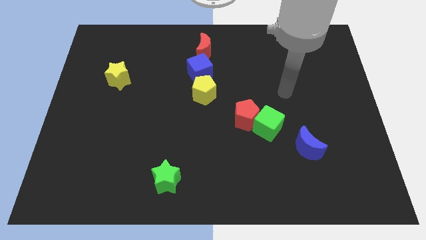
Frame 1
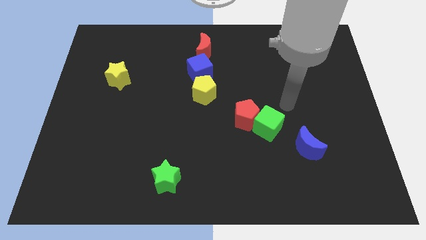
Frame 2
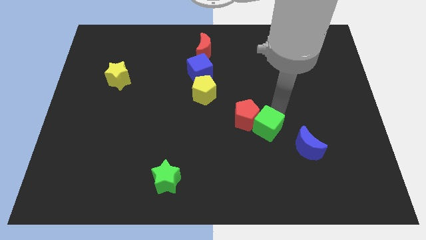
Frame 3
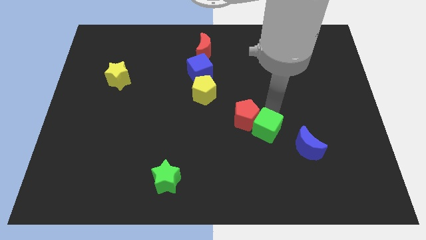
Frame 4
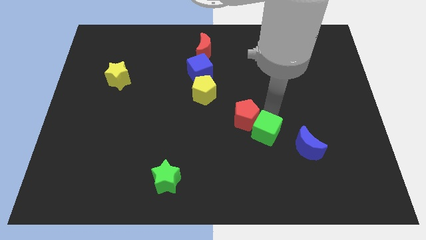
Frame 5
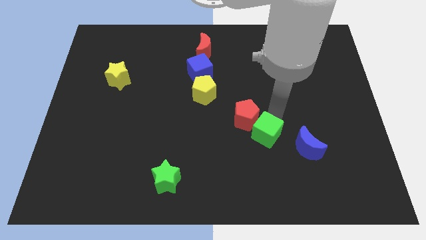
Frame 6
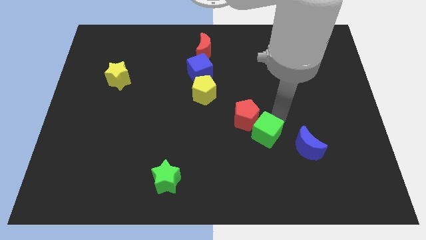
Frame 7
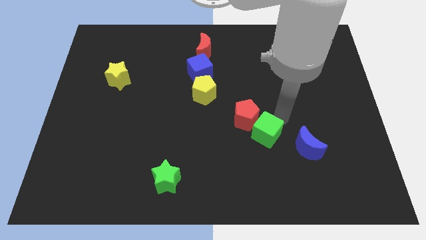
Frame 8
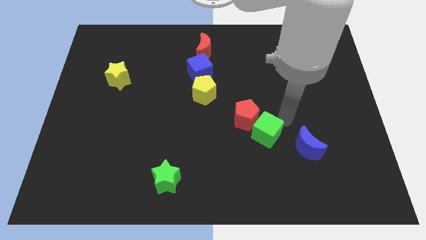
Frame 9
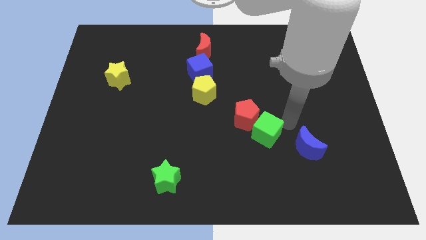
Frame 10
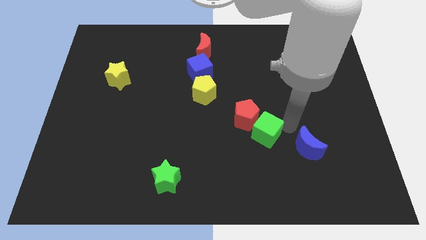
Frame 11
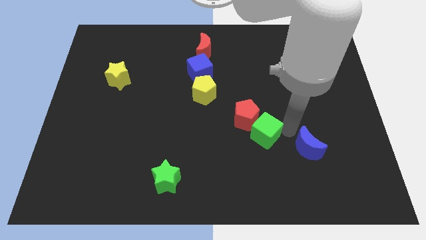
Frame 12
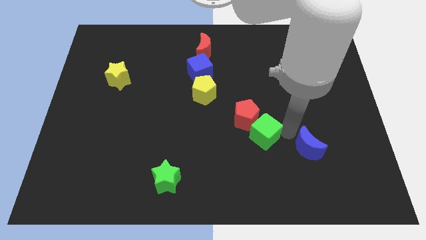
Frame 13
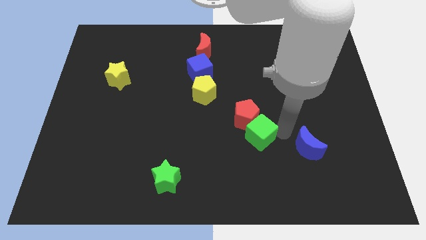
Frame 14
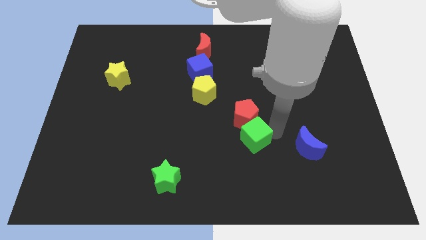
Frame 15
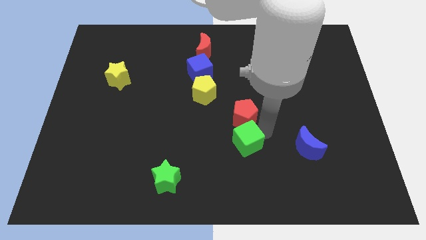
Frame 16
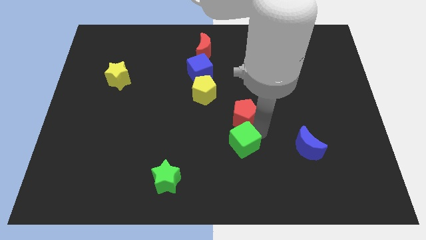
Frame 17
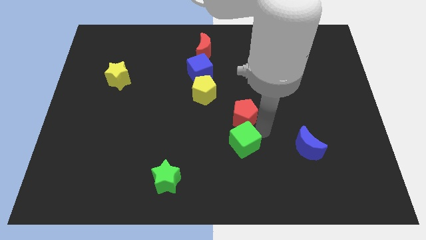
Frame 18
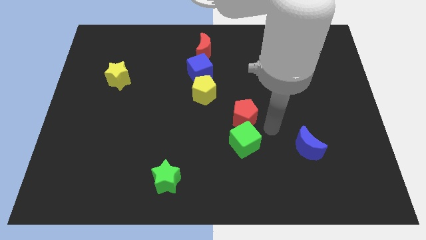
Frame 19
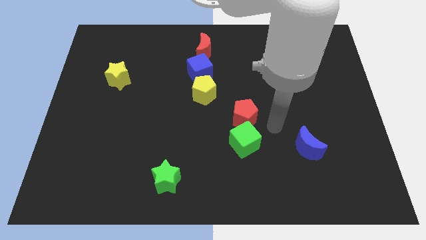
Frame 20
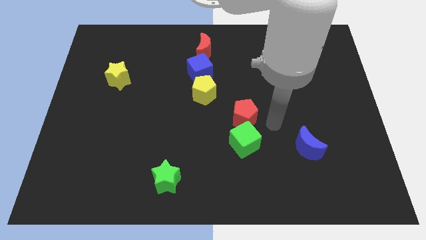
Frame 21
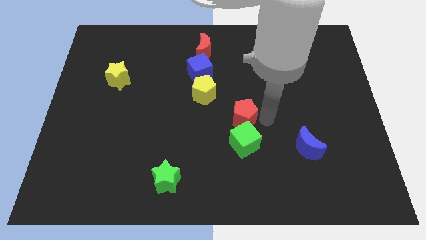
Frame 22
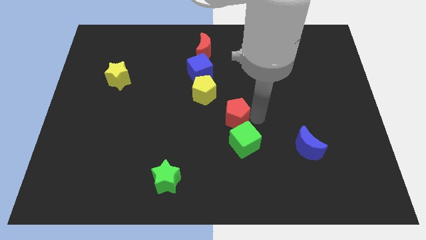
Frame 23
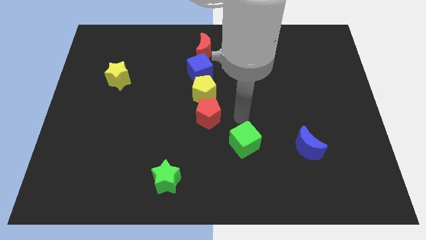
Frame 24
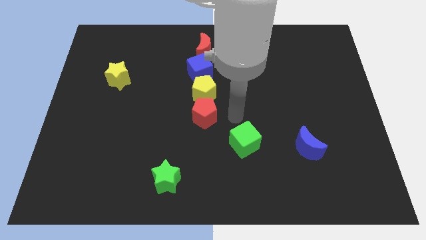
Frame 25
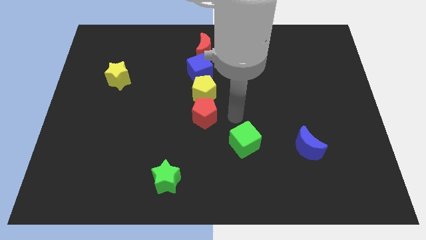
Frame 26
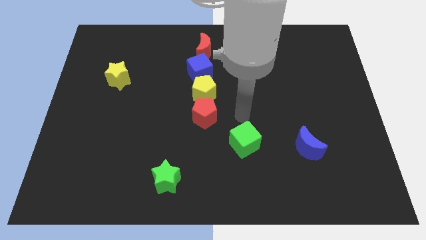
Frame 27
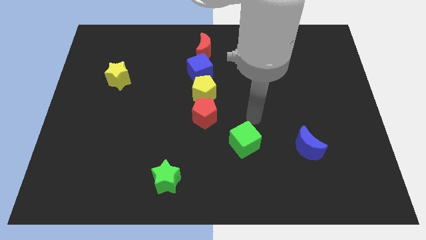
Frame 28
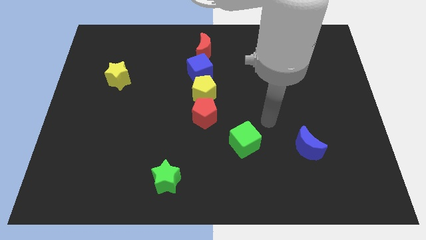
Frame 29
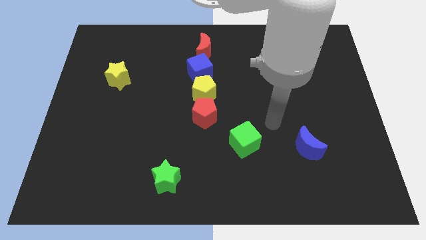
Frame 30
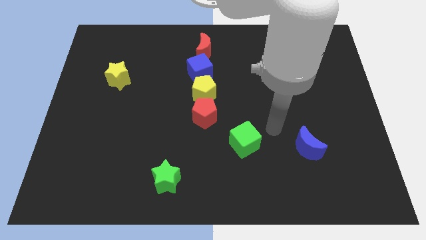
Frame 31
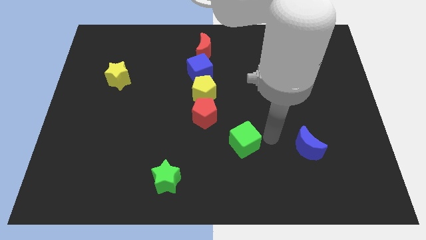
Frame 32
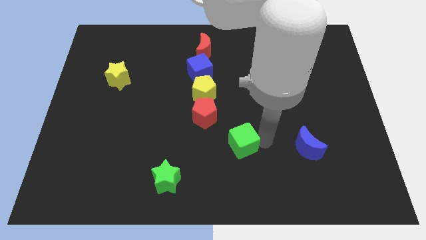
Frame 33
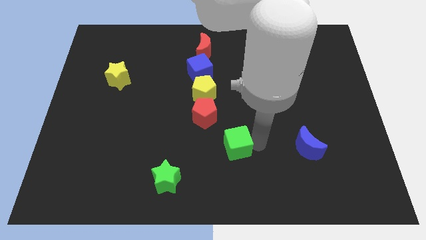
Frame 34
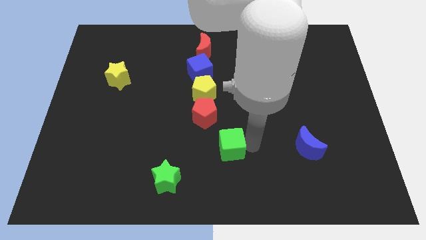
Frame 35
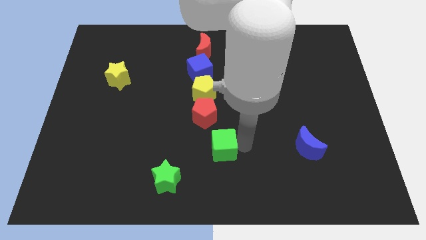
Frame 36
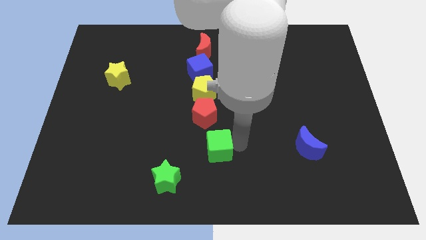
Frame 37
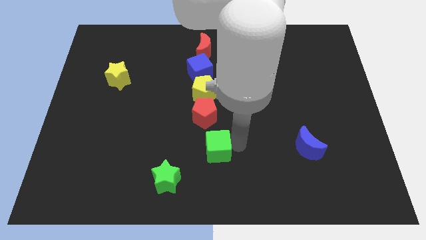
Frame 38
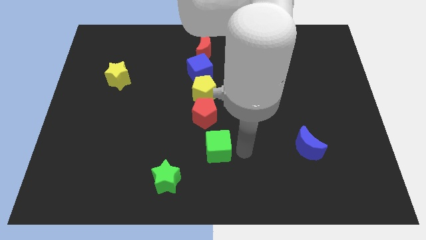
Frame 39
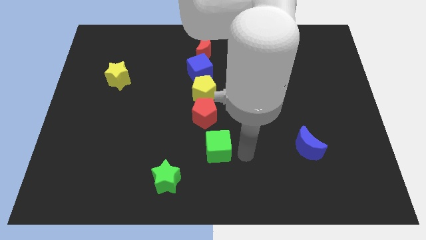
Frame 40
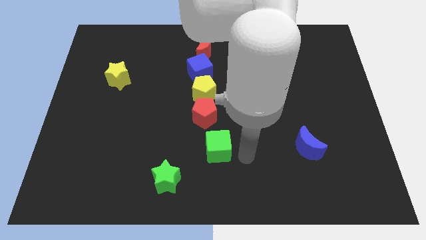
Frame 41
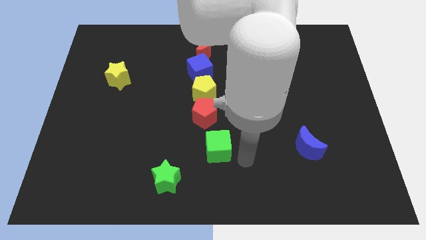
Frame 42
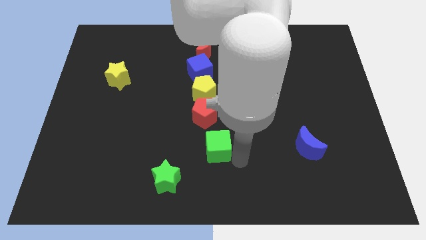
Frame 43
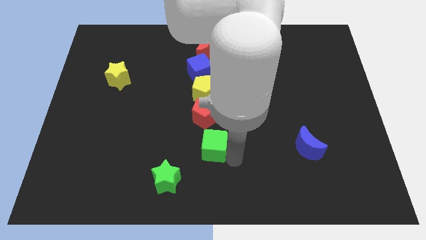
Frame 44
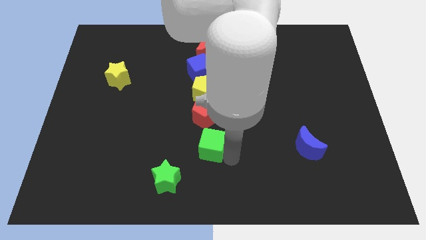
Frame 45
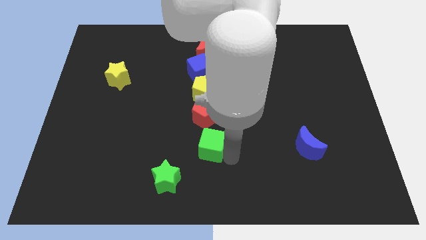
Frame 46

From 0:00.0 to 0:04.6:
push the red pentagon and green cube below the yellow pentagon

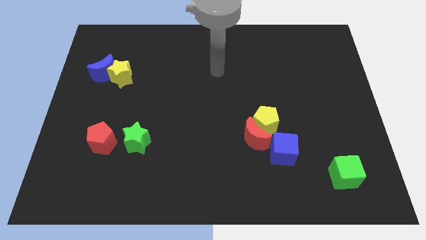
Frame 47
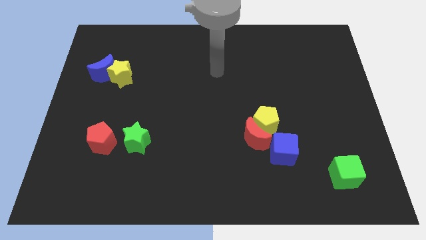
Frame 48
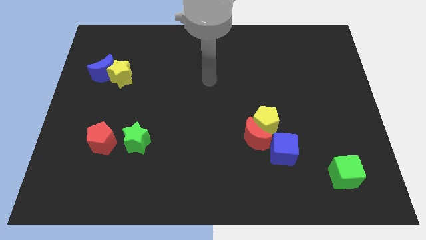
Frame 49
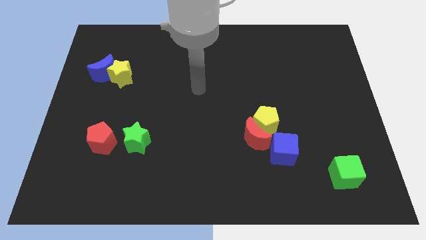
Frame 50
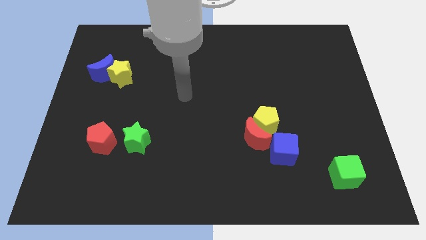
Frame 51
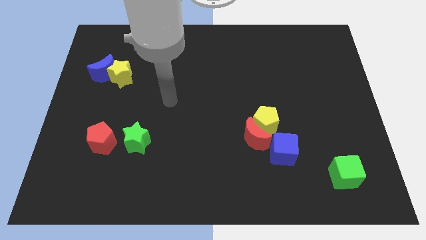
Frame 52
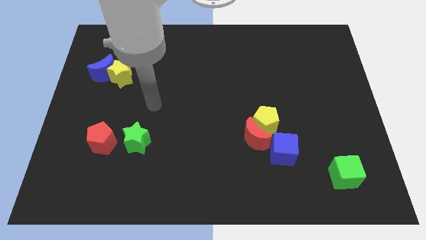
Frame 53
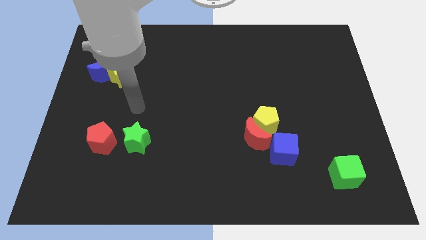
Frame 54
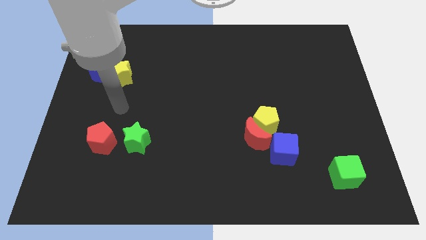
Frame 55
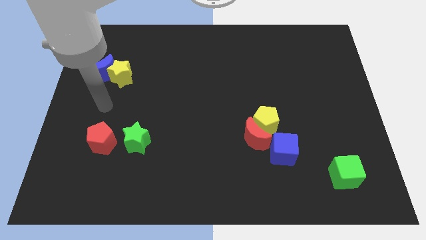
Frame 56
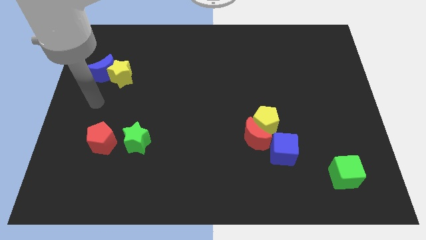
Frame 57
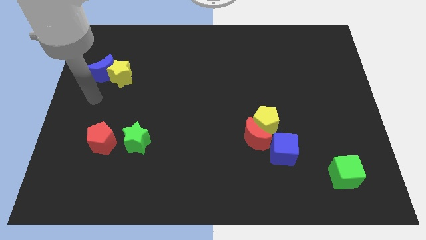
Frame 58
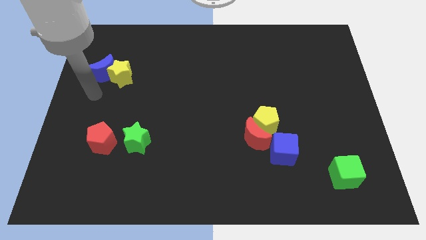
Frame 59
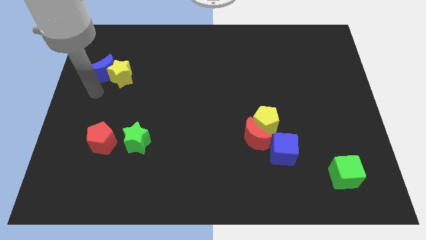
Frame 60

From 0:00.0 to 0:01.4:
point your arm to the bottom side of the blue crescent

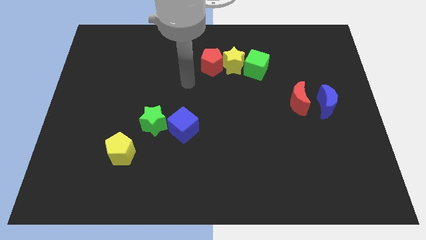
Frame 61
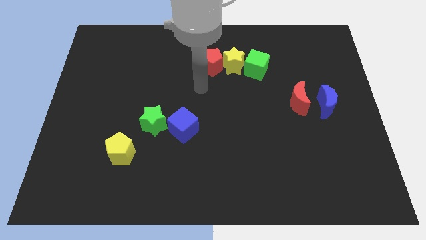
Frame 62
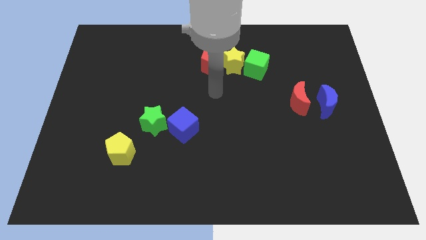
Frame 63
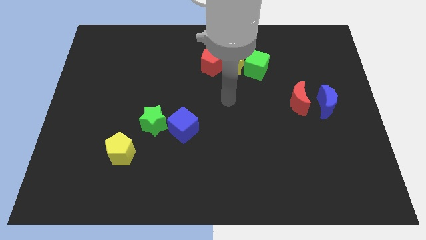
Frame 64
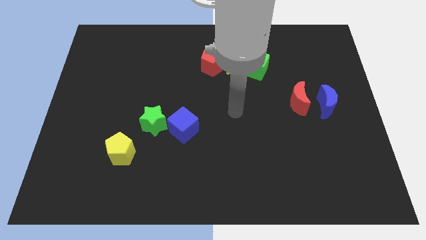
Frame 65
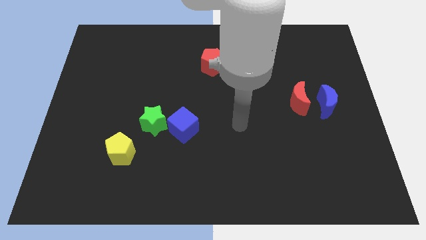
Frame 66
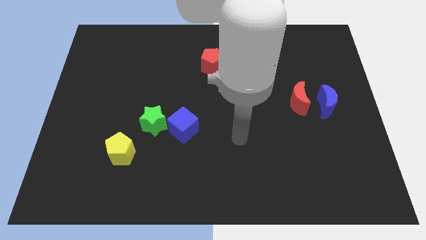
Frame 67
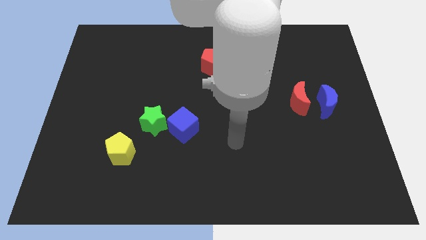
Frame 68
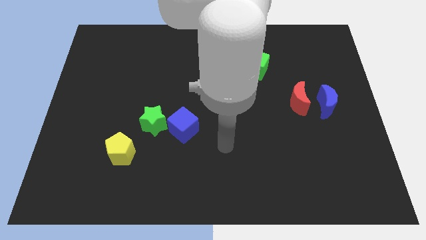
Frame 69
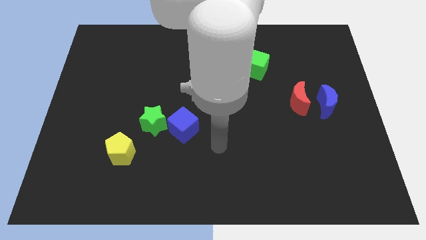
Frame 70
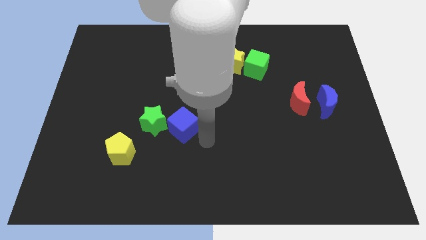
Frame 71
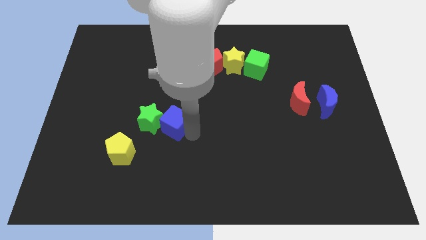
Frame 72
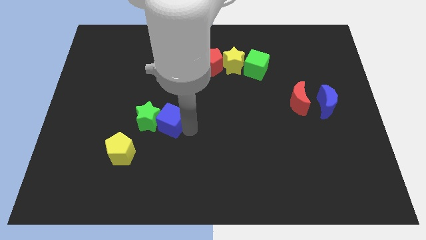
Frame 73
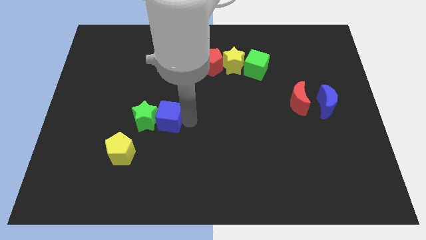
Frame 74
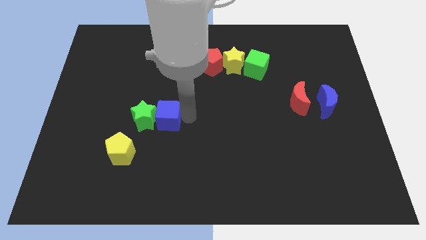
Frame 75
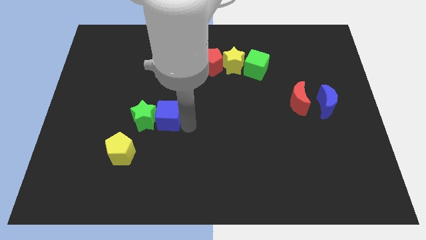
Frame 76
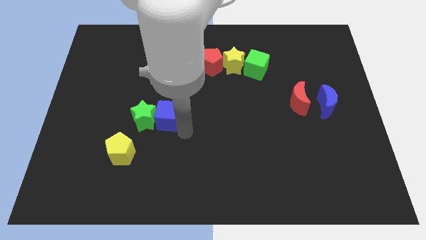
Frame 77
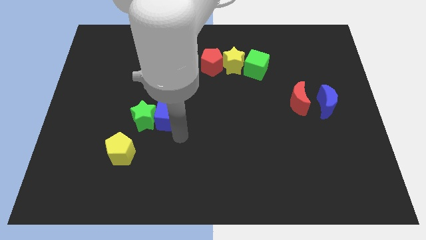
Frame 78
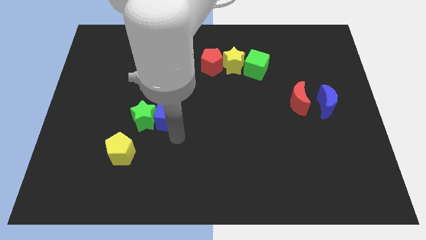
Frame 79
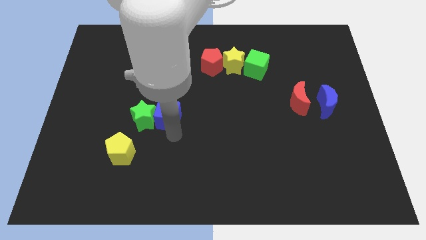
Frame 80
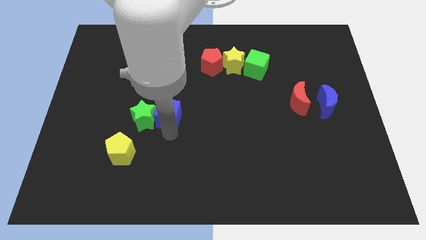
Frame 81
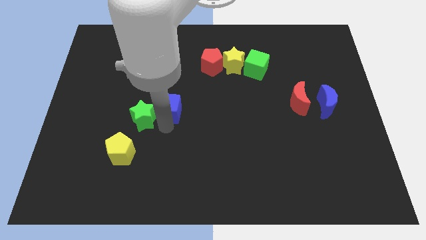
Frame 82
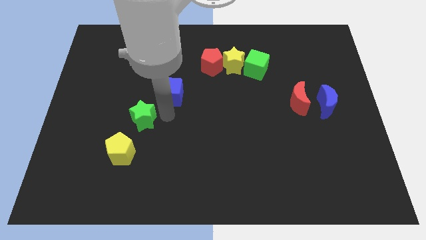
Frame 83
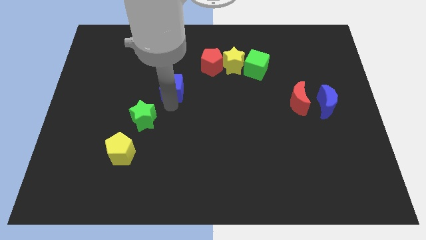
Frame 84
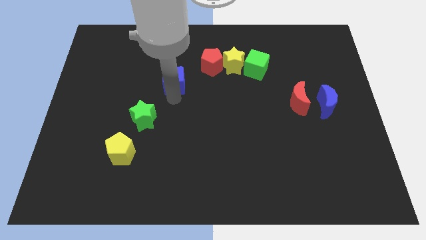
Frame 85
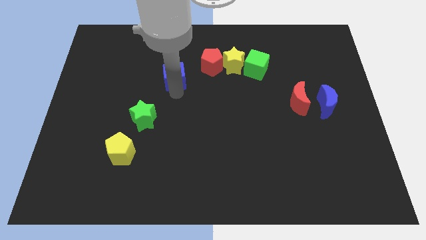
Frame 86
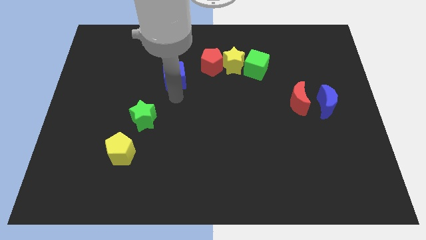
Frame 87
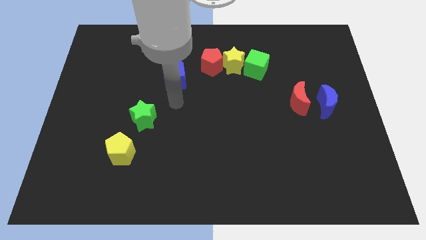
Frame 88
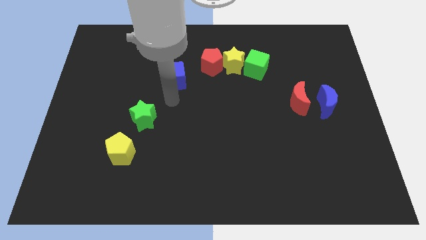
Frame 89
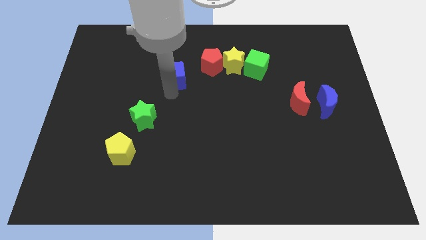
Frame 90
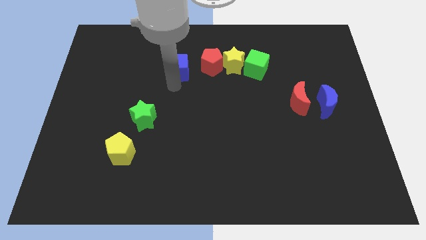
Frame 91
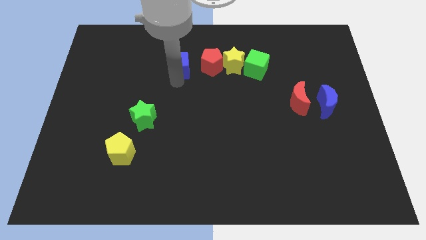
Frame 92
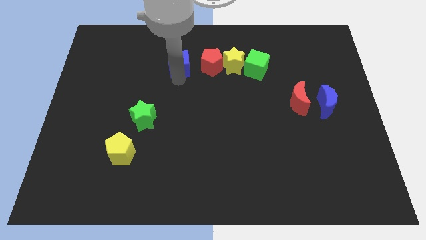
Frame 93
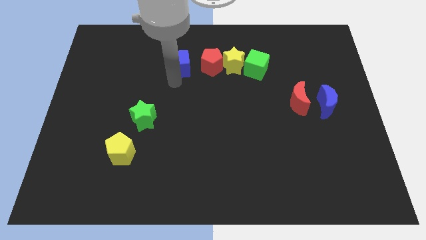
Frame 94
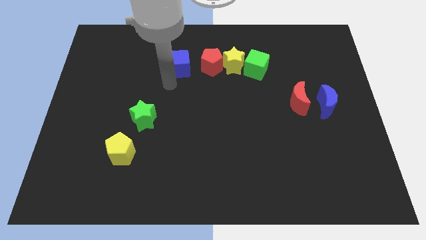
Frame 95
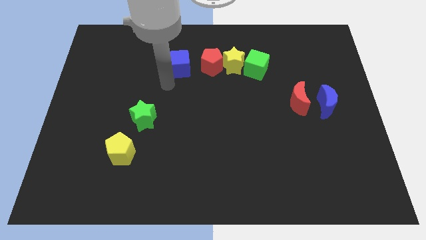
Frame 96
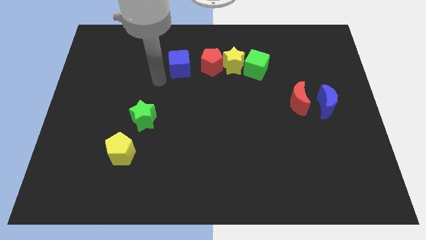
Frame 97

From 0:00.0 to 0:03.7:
place blue cube to the left of red pentagon
